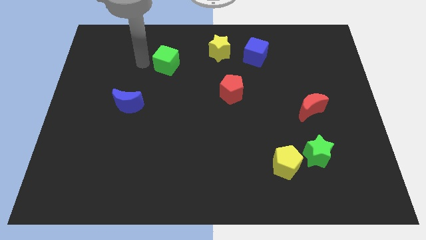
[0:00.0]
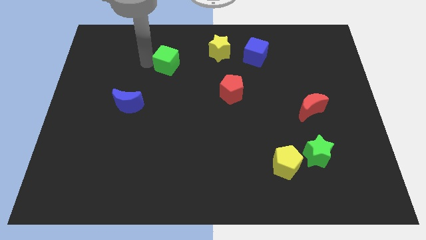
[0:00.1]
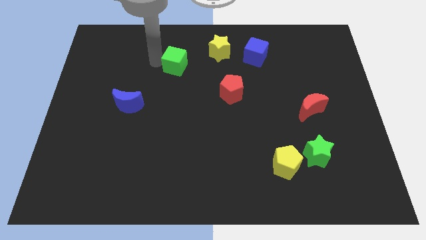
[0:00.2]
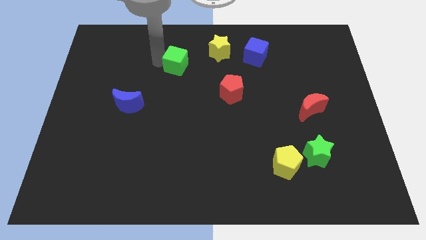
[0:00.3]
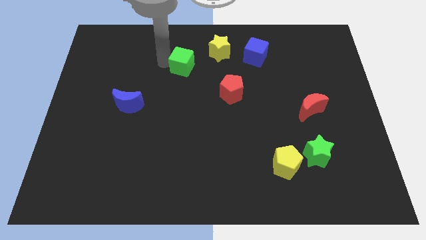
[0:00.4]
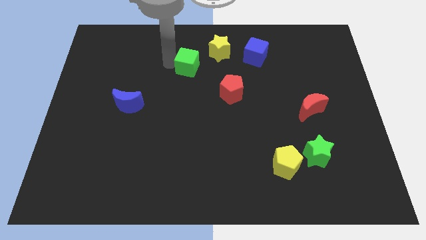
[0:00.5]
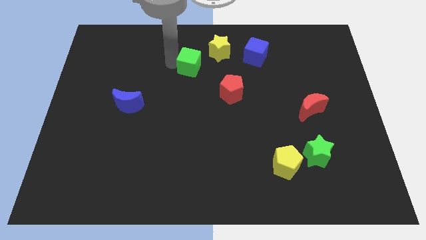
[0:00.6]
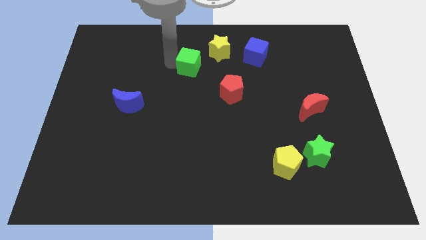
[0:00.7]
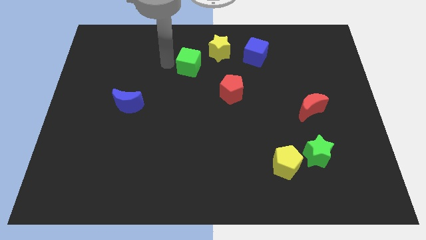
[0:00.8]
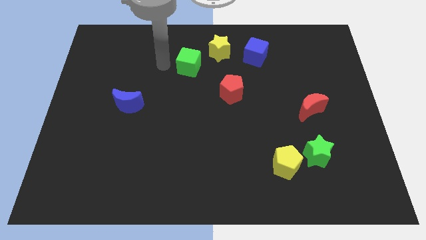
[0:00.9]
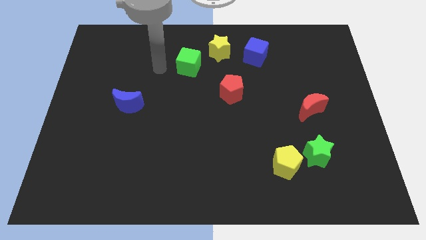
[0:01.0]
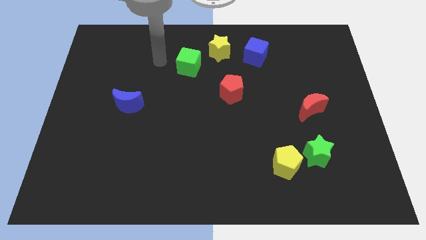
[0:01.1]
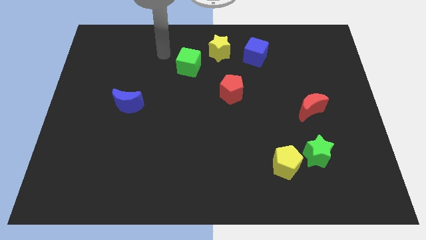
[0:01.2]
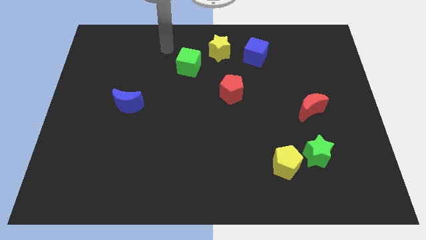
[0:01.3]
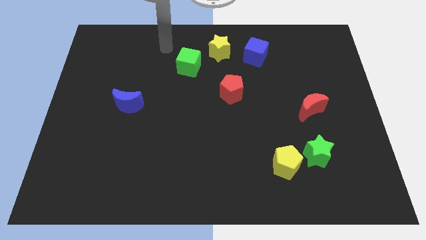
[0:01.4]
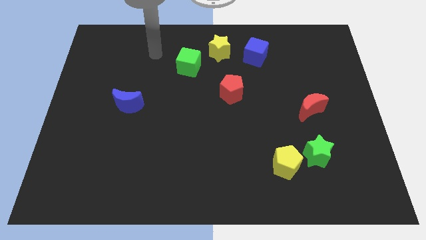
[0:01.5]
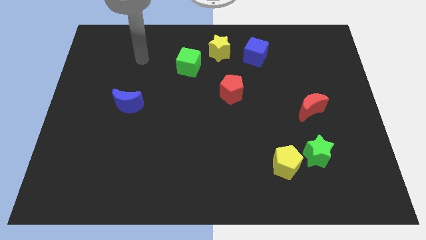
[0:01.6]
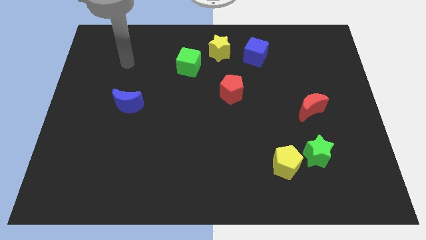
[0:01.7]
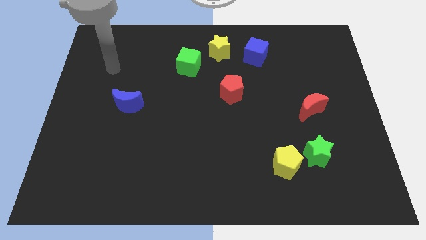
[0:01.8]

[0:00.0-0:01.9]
place green cube to the left of yellow star

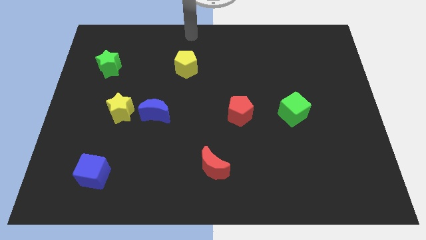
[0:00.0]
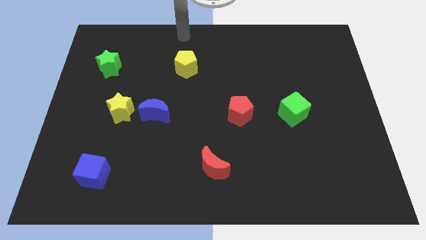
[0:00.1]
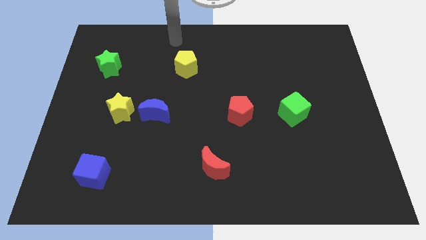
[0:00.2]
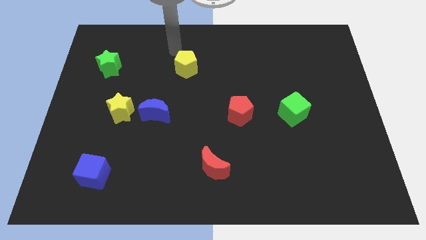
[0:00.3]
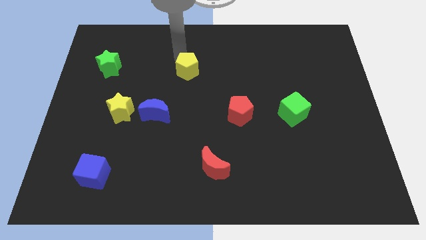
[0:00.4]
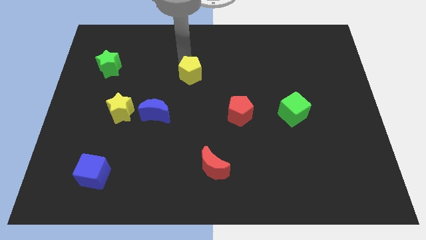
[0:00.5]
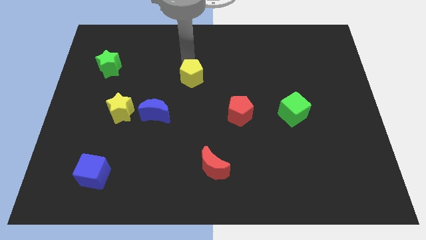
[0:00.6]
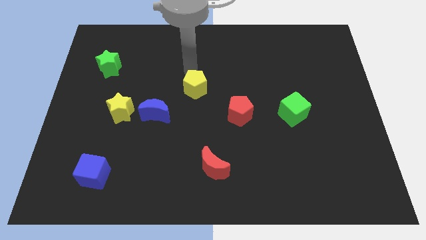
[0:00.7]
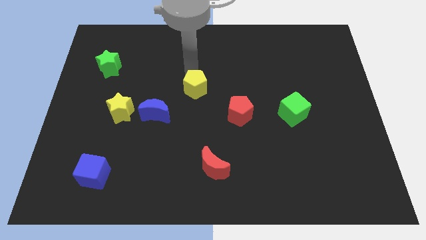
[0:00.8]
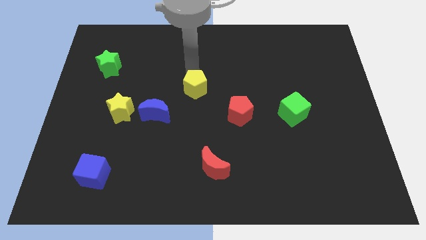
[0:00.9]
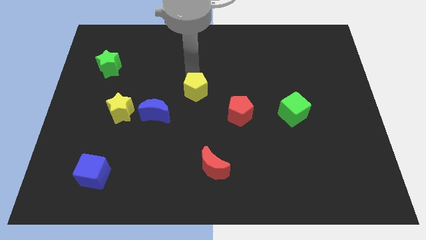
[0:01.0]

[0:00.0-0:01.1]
slightly move the yellow pentagon towards bottom

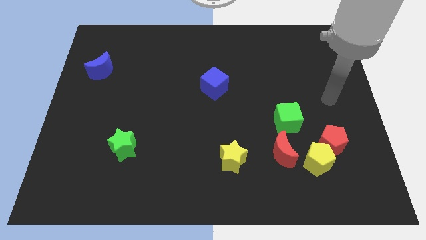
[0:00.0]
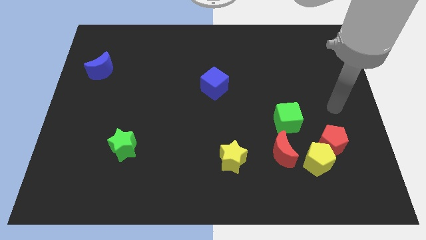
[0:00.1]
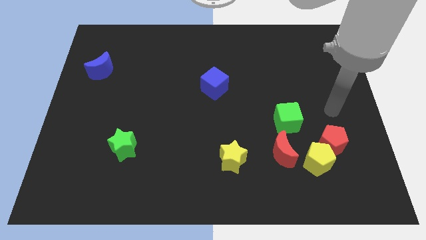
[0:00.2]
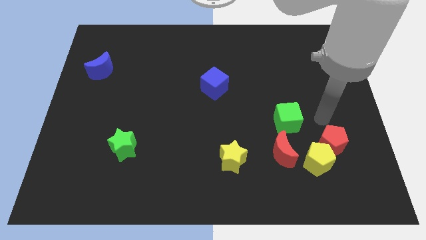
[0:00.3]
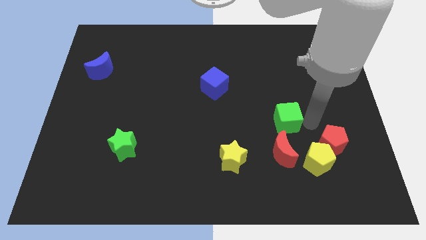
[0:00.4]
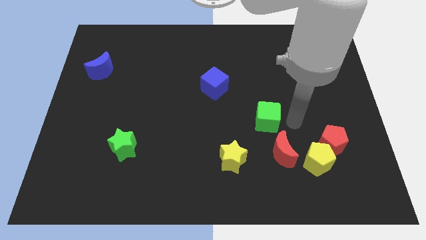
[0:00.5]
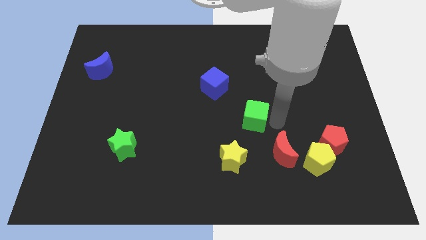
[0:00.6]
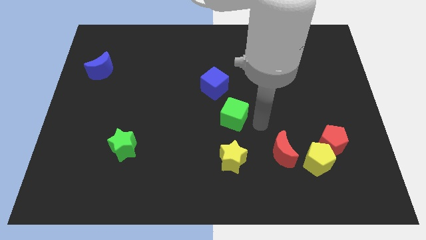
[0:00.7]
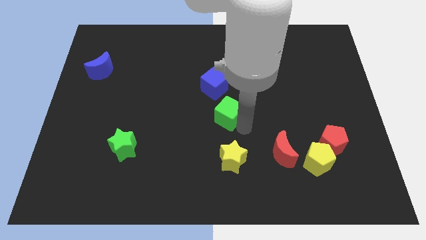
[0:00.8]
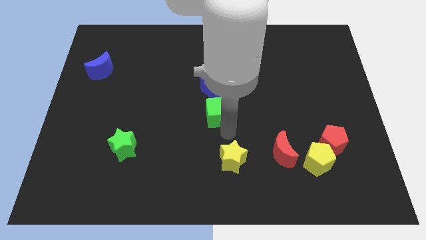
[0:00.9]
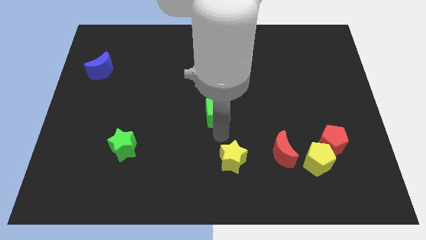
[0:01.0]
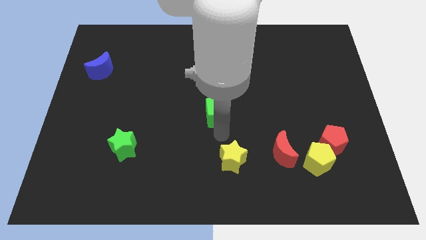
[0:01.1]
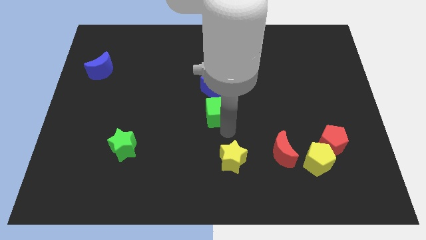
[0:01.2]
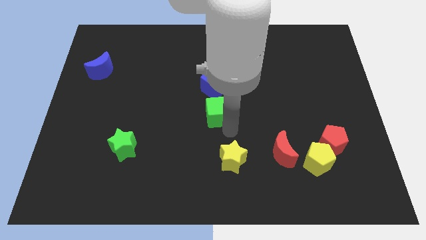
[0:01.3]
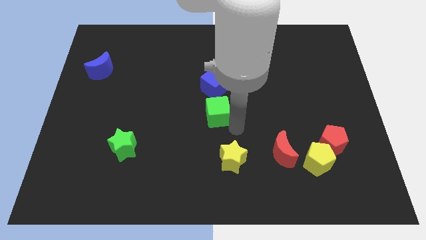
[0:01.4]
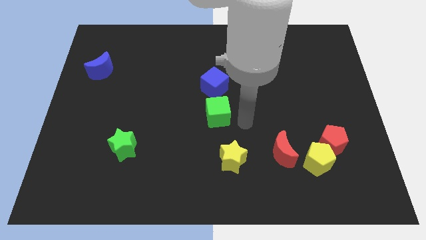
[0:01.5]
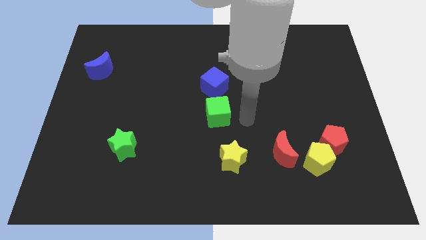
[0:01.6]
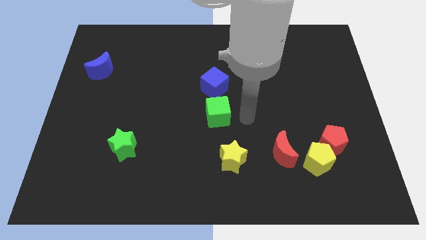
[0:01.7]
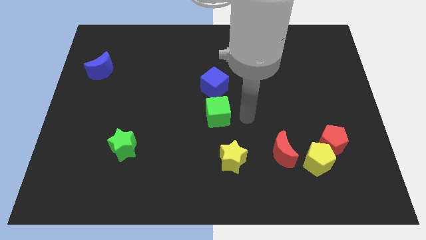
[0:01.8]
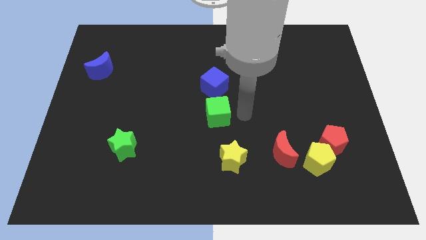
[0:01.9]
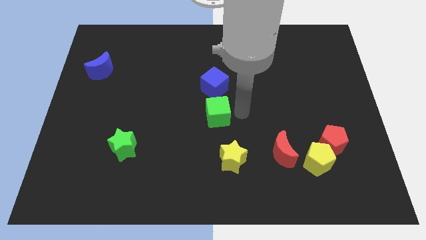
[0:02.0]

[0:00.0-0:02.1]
place the green cube above the yellow star

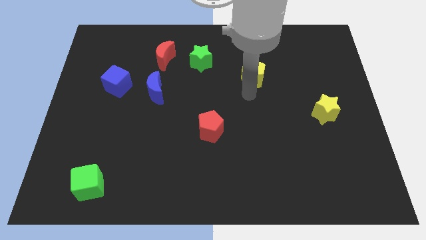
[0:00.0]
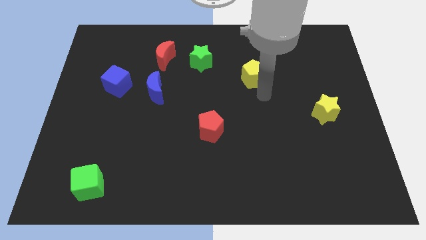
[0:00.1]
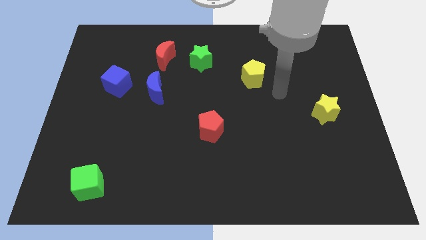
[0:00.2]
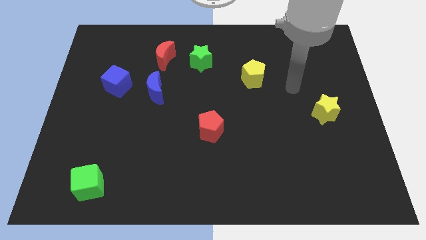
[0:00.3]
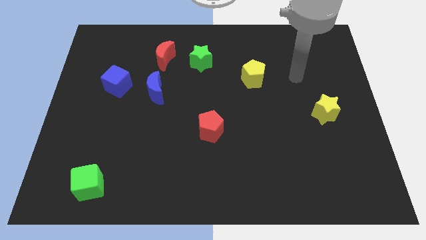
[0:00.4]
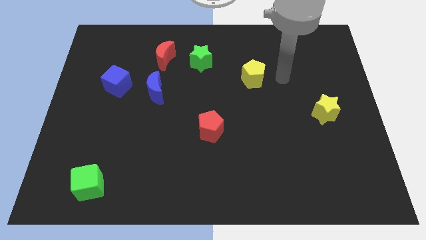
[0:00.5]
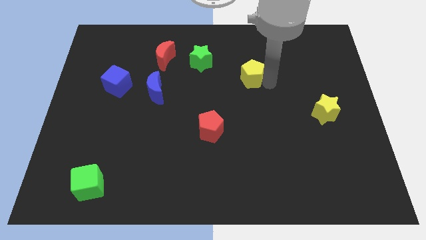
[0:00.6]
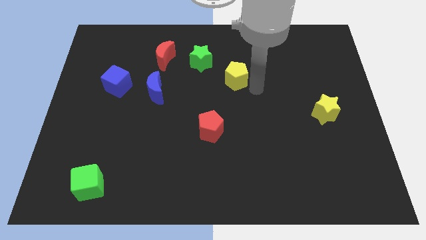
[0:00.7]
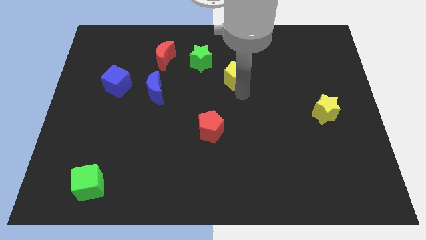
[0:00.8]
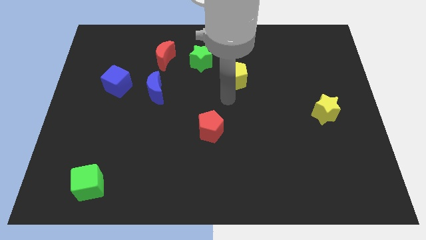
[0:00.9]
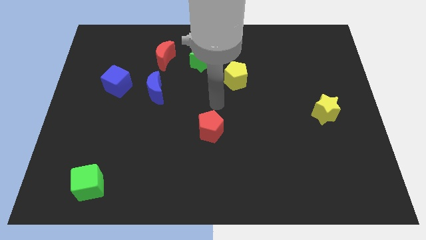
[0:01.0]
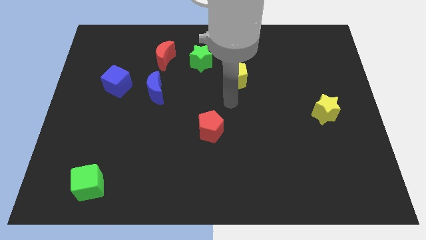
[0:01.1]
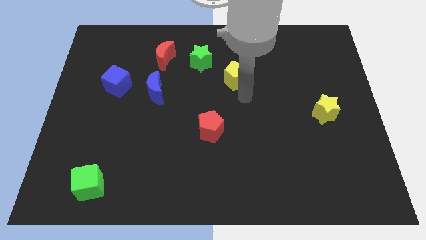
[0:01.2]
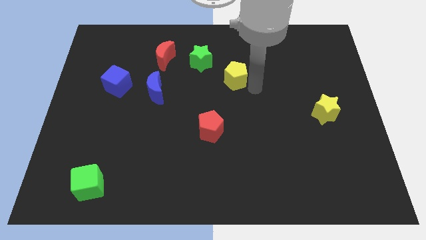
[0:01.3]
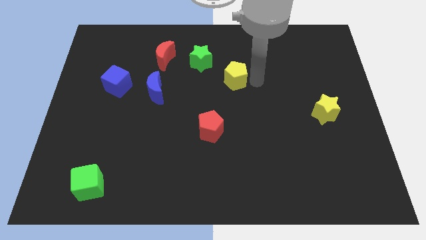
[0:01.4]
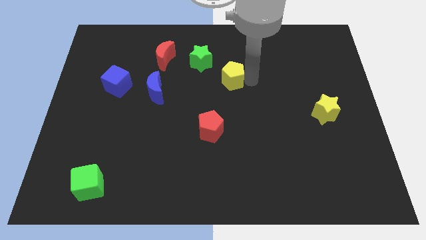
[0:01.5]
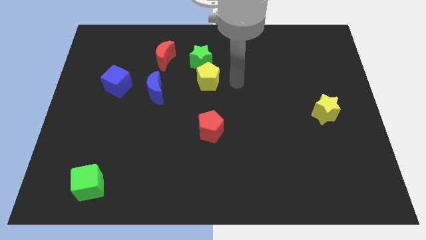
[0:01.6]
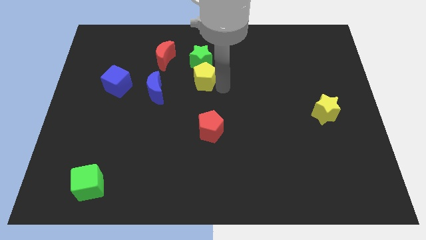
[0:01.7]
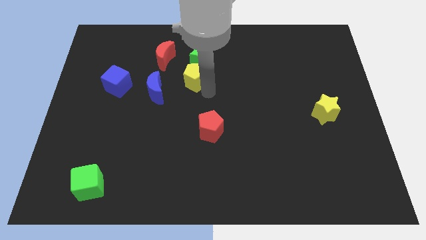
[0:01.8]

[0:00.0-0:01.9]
place the yellow pentagon to the bottom side of the green star

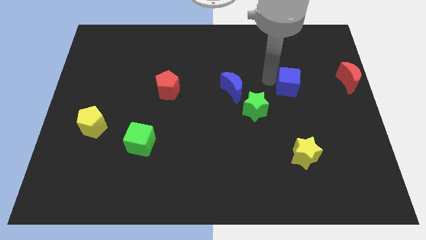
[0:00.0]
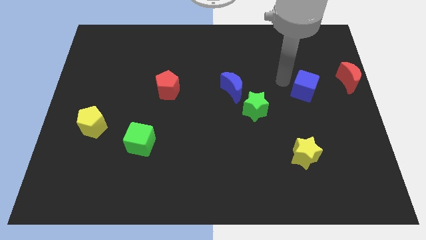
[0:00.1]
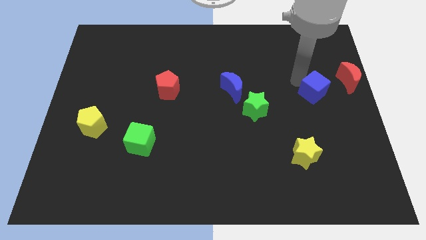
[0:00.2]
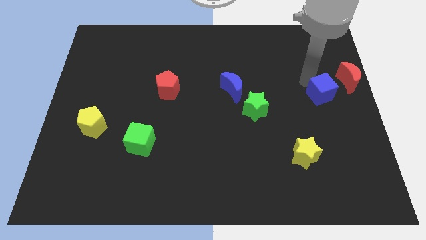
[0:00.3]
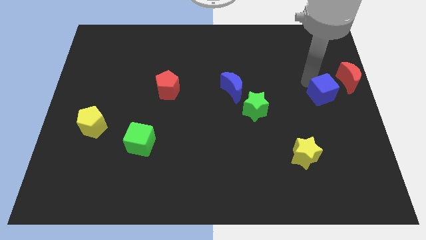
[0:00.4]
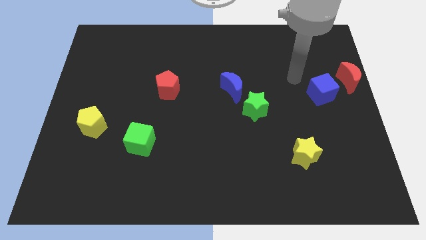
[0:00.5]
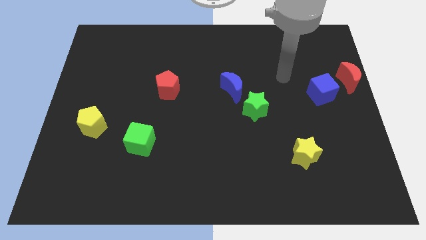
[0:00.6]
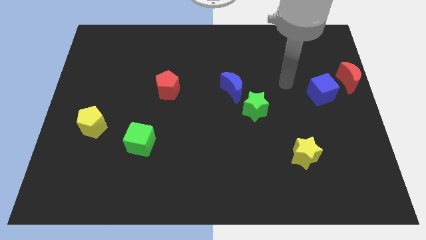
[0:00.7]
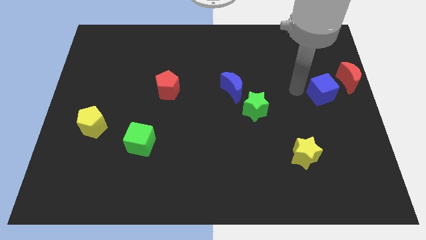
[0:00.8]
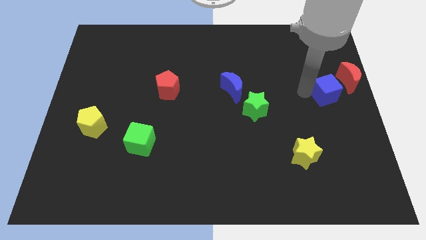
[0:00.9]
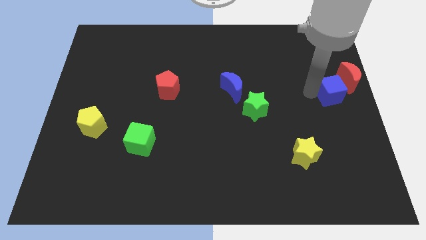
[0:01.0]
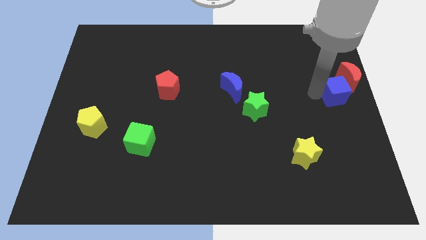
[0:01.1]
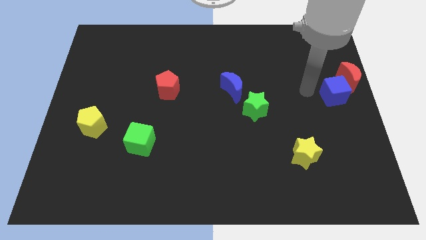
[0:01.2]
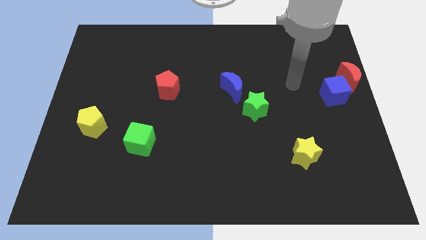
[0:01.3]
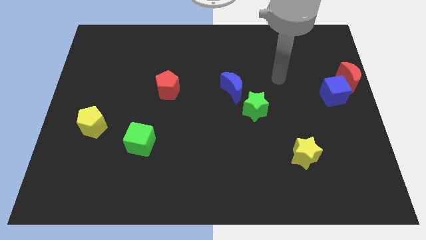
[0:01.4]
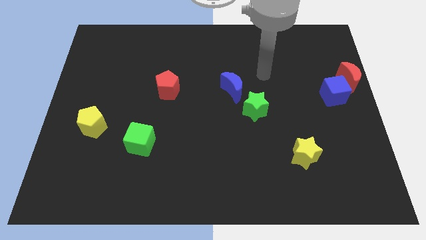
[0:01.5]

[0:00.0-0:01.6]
move the blue cube into the red crescent

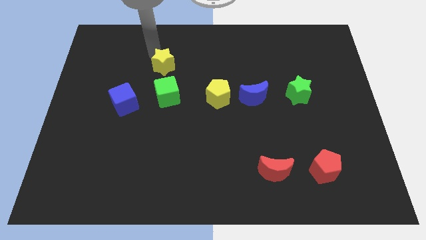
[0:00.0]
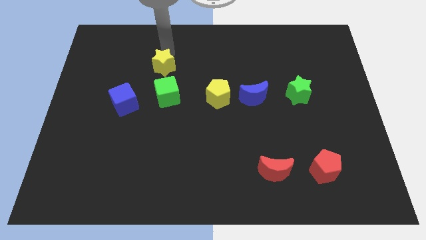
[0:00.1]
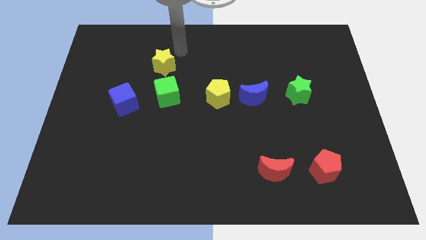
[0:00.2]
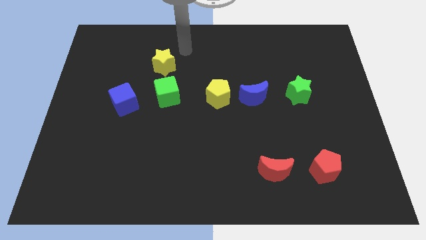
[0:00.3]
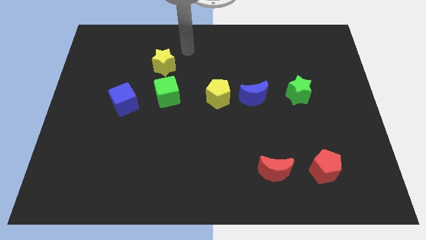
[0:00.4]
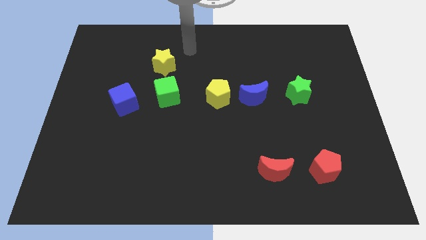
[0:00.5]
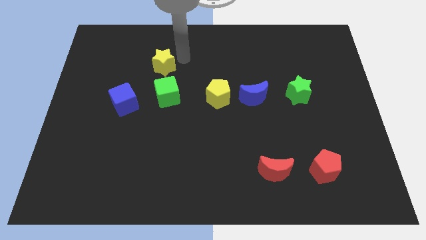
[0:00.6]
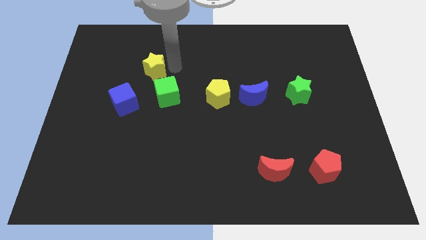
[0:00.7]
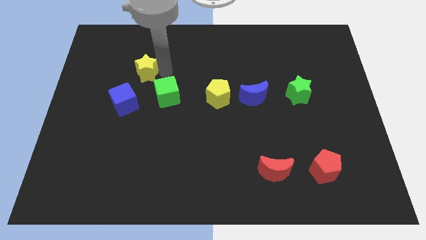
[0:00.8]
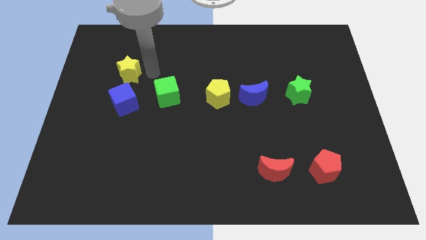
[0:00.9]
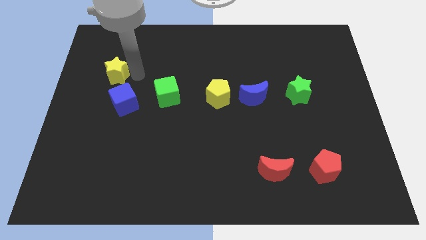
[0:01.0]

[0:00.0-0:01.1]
move yellow star above blue cube
